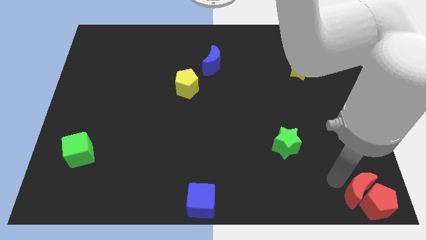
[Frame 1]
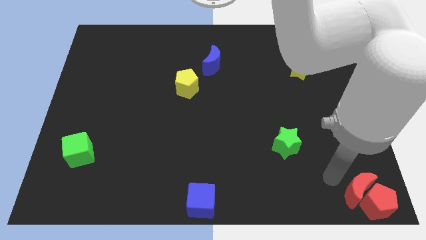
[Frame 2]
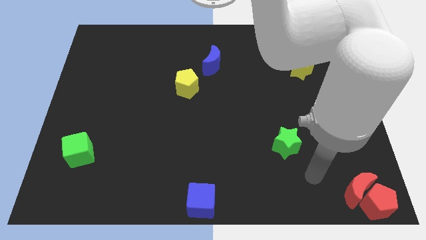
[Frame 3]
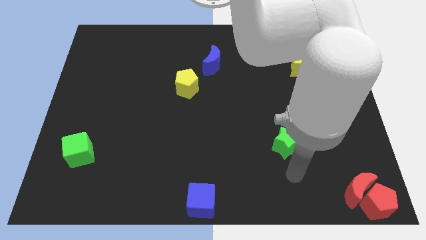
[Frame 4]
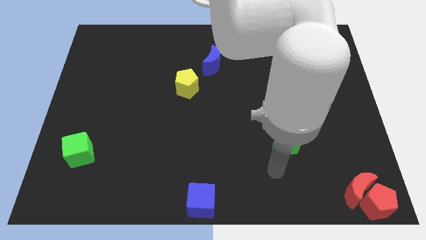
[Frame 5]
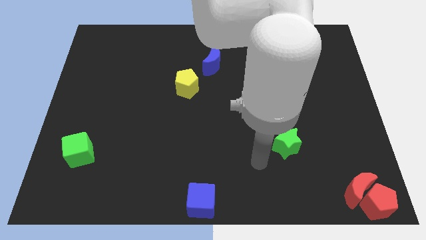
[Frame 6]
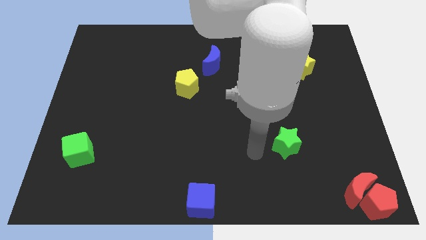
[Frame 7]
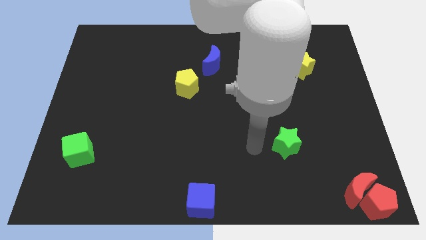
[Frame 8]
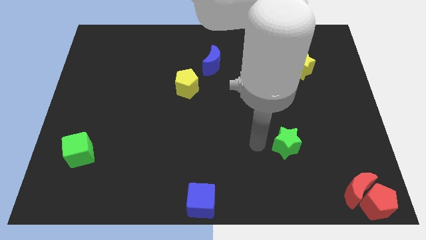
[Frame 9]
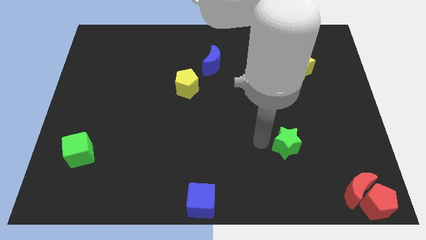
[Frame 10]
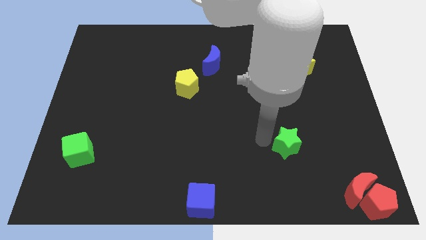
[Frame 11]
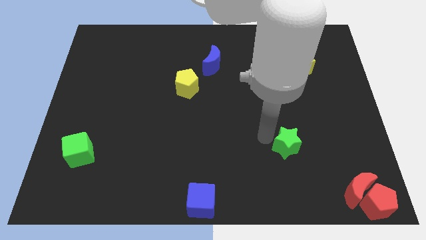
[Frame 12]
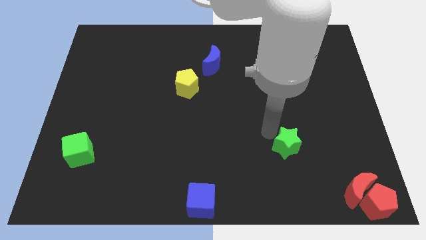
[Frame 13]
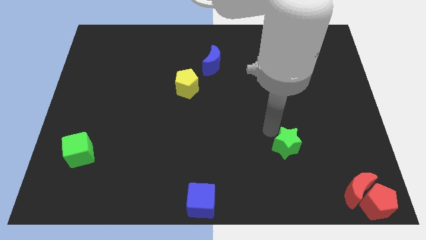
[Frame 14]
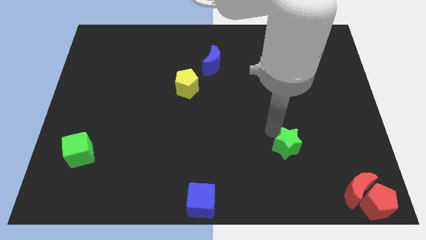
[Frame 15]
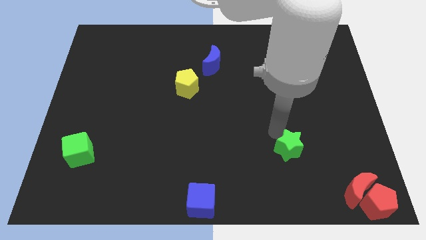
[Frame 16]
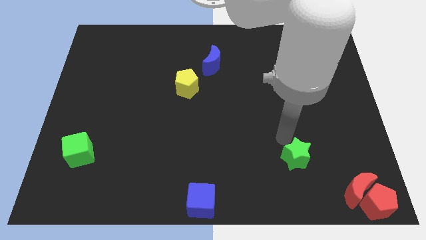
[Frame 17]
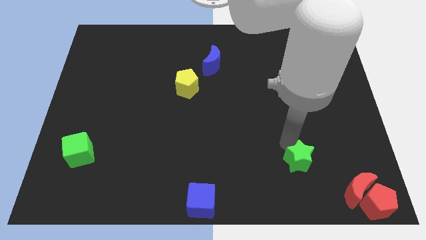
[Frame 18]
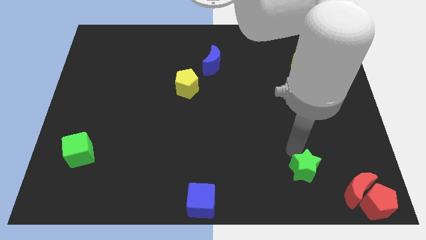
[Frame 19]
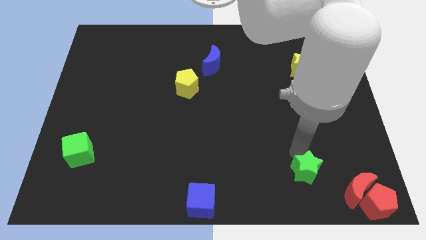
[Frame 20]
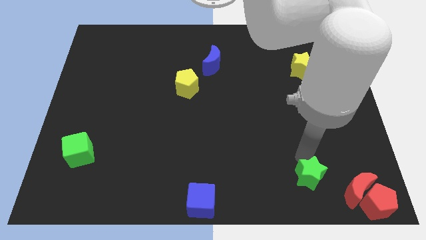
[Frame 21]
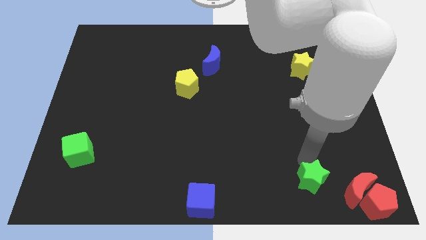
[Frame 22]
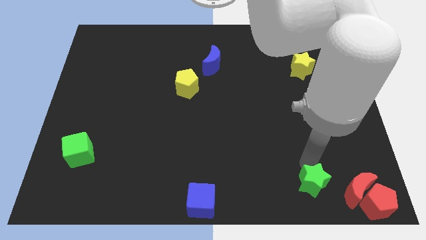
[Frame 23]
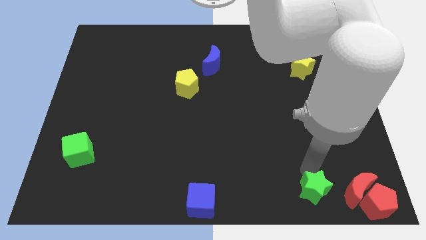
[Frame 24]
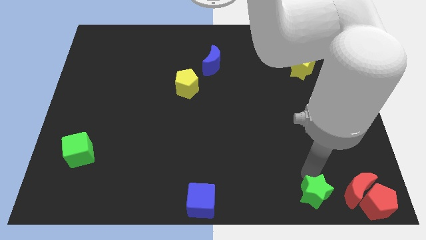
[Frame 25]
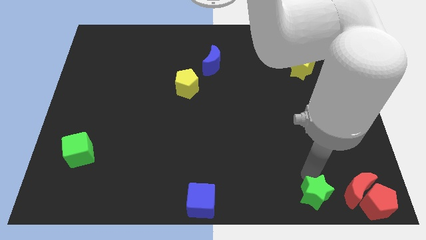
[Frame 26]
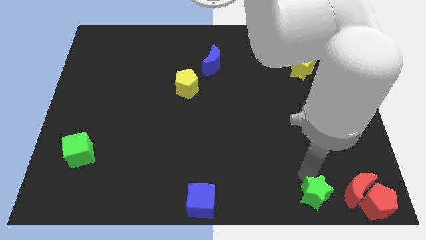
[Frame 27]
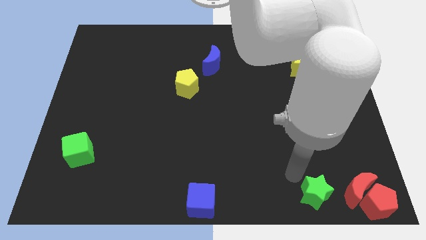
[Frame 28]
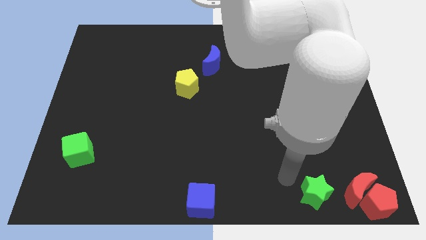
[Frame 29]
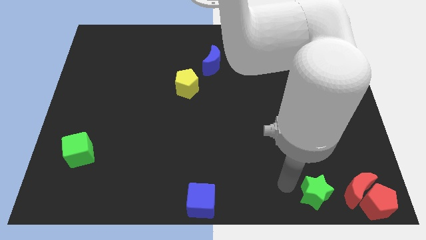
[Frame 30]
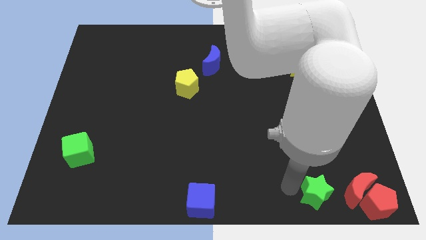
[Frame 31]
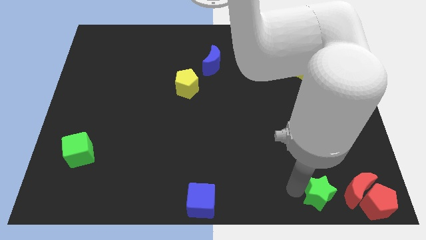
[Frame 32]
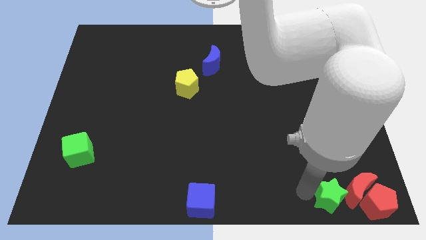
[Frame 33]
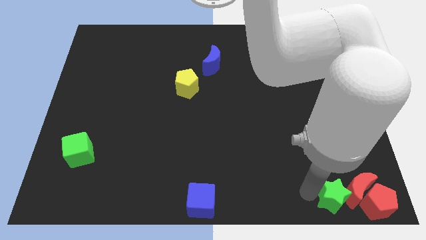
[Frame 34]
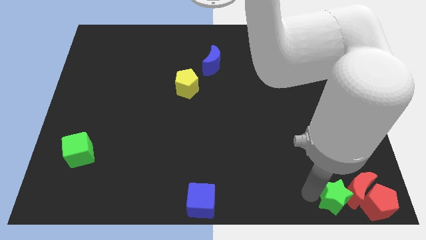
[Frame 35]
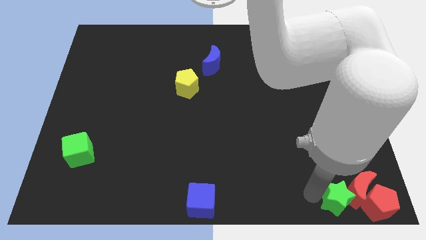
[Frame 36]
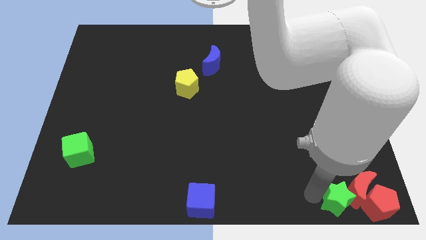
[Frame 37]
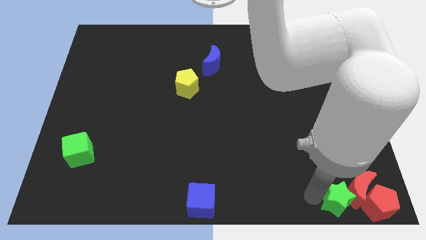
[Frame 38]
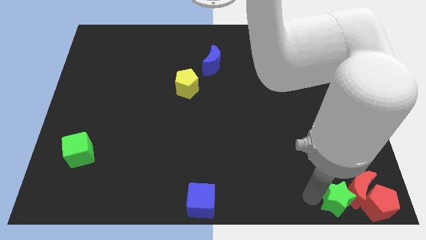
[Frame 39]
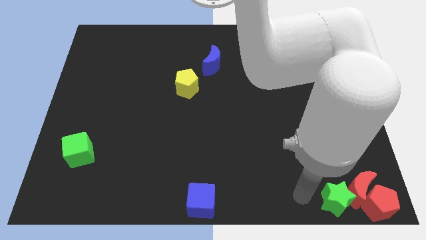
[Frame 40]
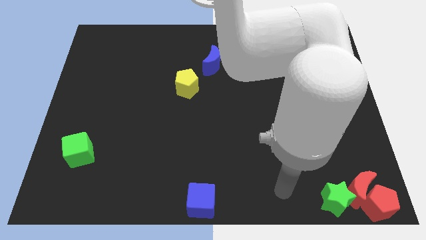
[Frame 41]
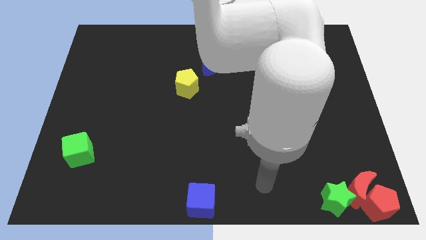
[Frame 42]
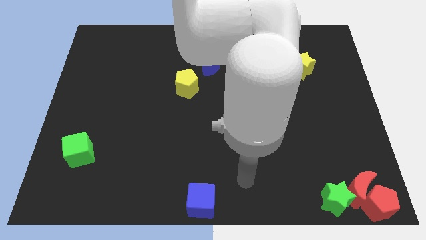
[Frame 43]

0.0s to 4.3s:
push the green star into the red moon

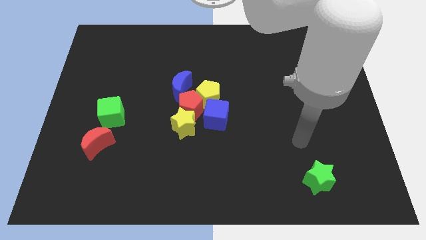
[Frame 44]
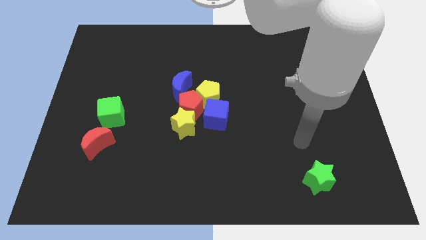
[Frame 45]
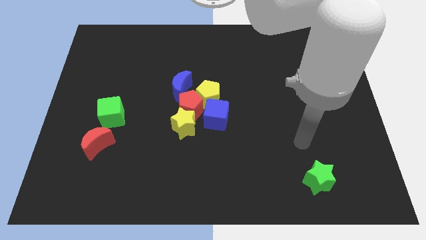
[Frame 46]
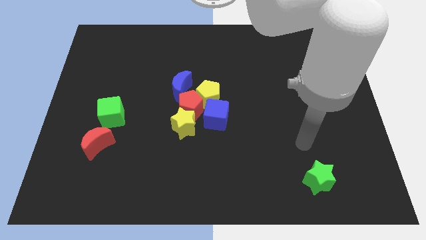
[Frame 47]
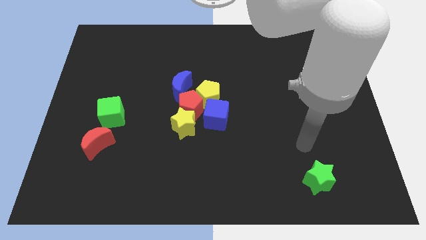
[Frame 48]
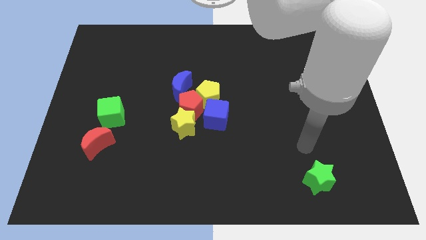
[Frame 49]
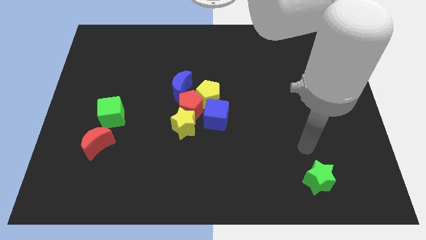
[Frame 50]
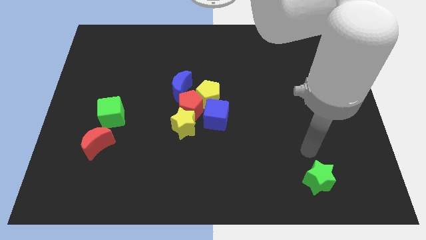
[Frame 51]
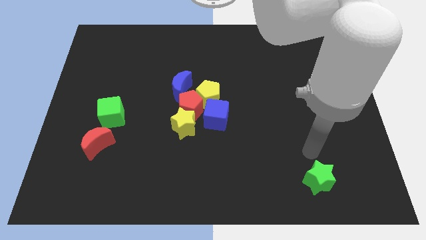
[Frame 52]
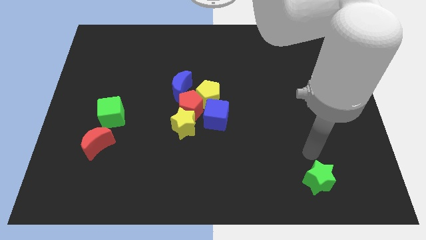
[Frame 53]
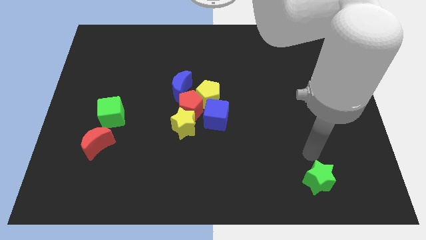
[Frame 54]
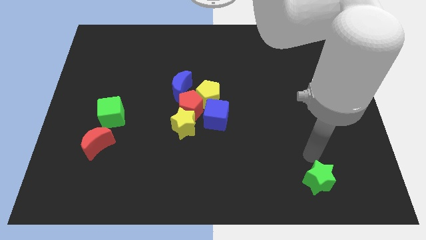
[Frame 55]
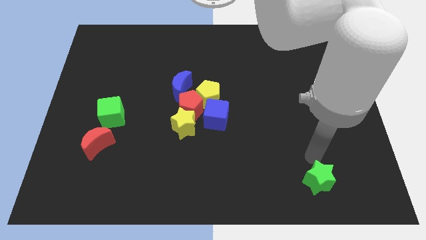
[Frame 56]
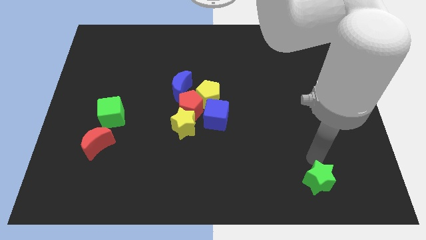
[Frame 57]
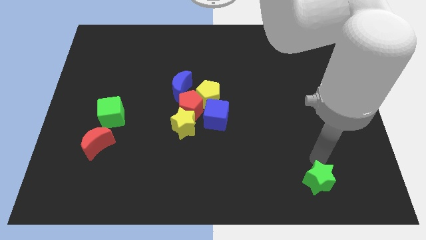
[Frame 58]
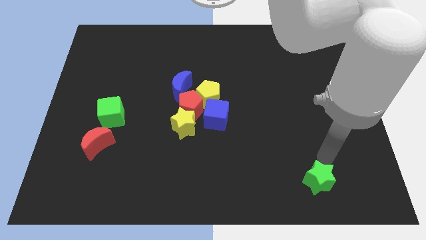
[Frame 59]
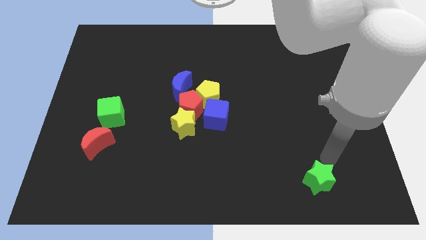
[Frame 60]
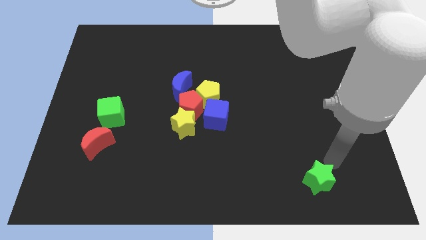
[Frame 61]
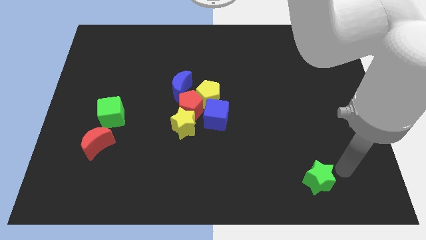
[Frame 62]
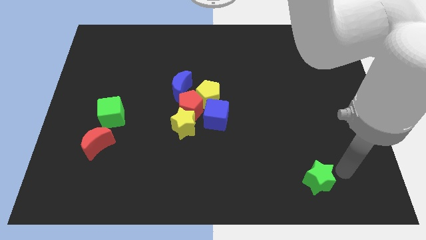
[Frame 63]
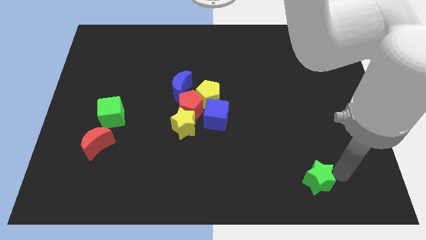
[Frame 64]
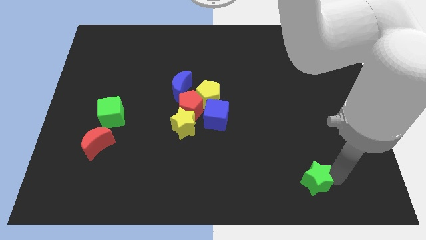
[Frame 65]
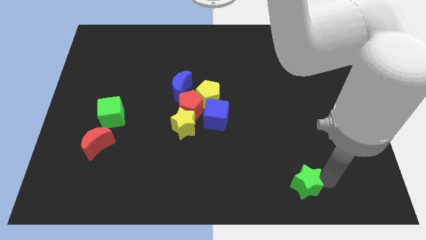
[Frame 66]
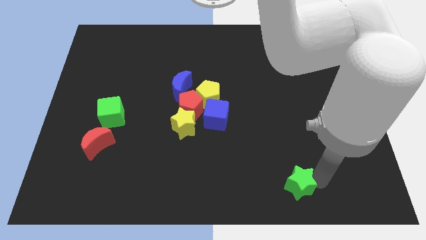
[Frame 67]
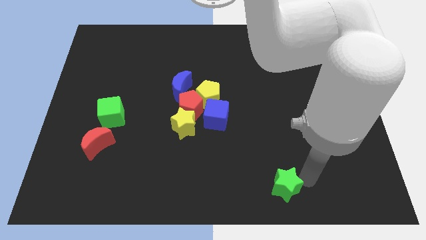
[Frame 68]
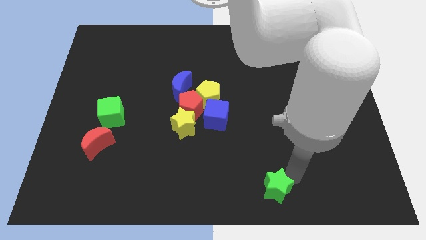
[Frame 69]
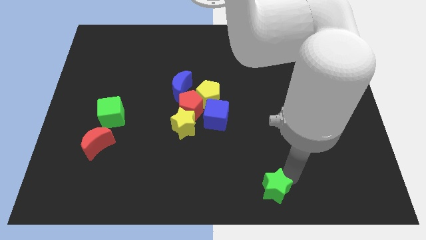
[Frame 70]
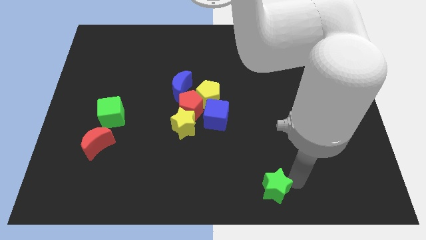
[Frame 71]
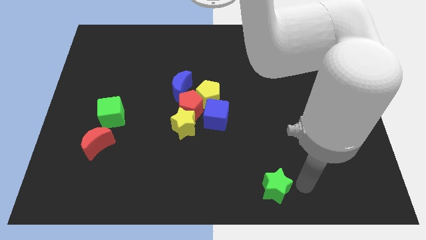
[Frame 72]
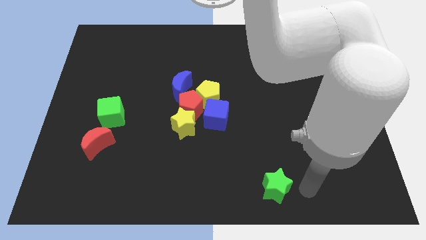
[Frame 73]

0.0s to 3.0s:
slightly move the green star towards the left

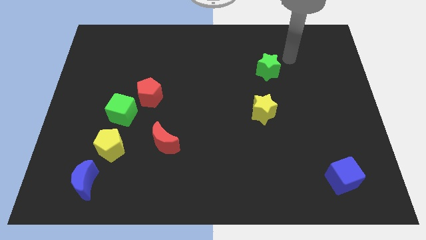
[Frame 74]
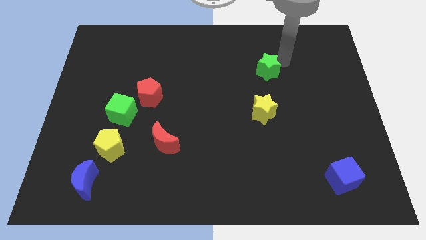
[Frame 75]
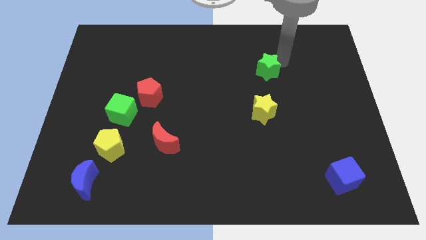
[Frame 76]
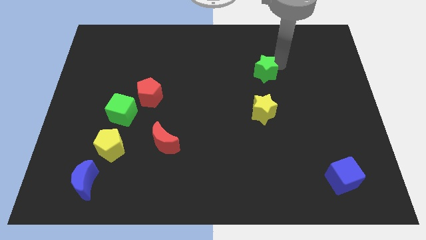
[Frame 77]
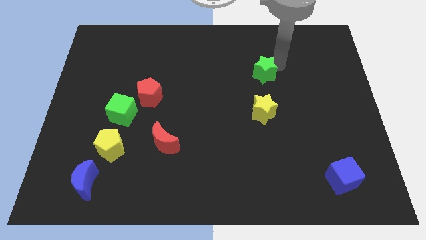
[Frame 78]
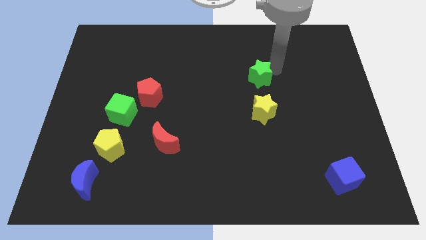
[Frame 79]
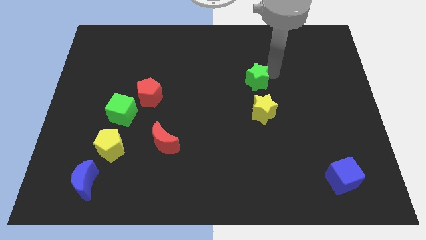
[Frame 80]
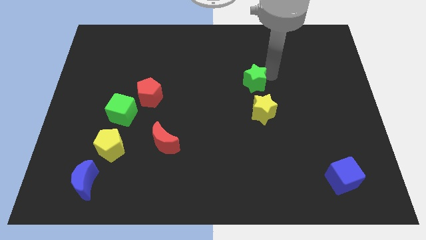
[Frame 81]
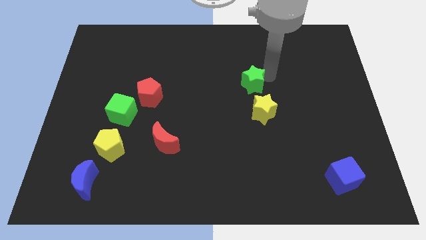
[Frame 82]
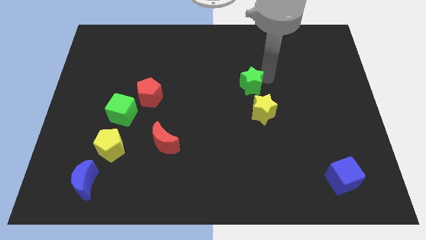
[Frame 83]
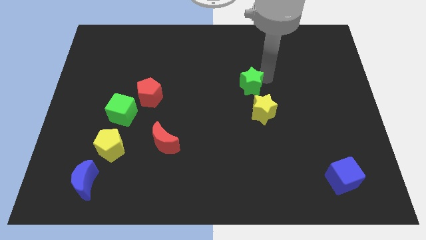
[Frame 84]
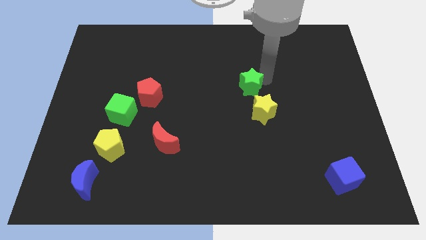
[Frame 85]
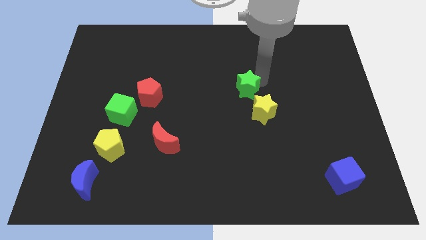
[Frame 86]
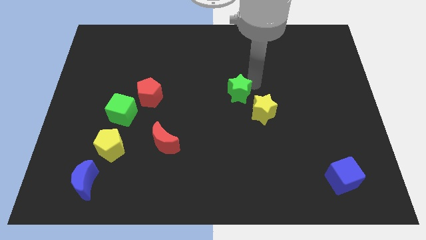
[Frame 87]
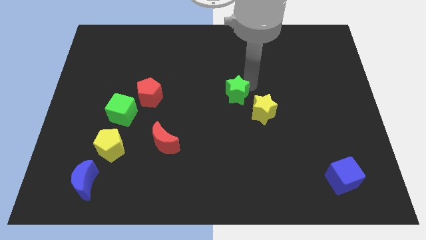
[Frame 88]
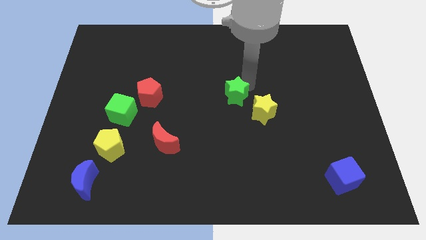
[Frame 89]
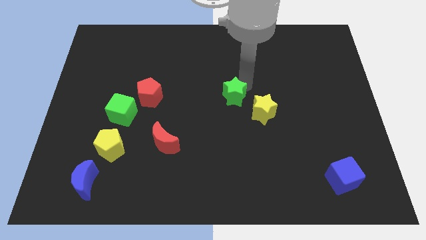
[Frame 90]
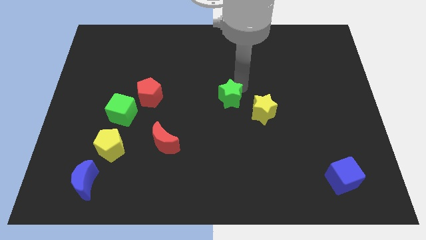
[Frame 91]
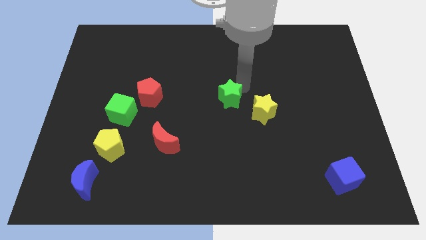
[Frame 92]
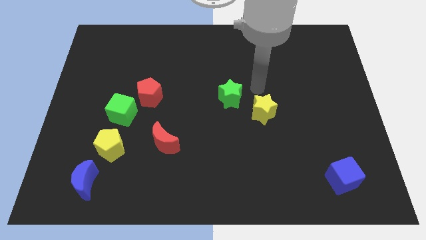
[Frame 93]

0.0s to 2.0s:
move the green star to the top left of the yellow star
